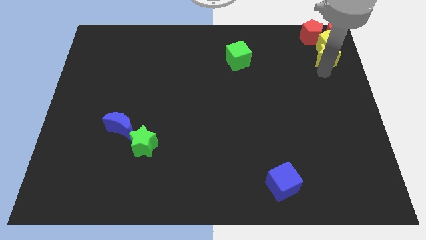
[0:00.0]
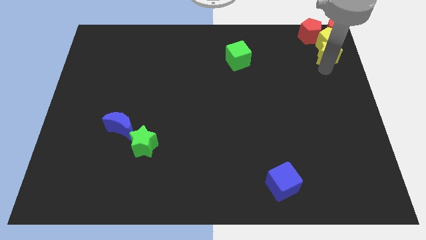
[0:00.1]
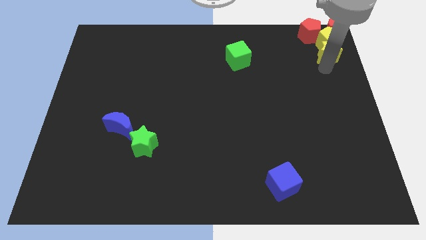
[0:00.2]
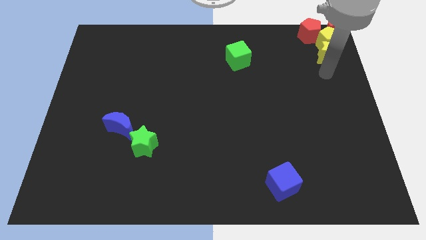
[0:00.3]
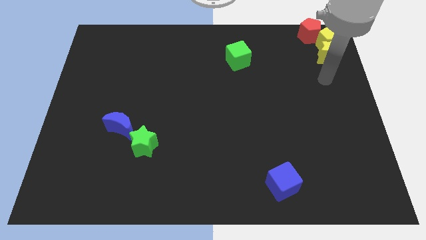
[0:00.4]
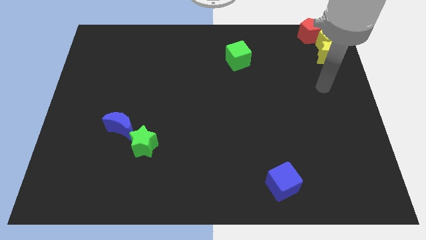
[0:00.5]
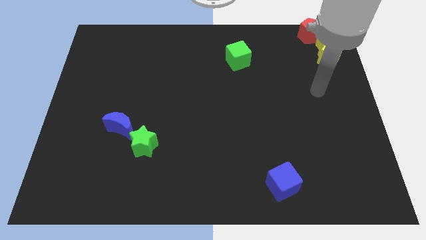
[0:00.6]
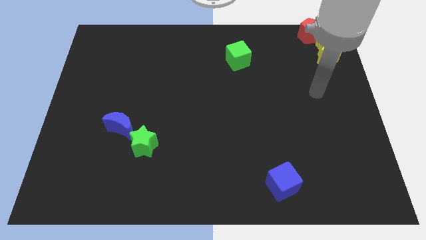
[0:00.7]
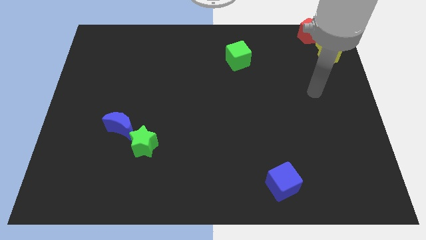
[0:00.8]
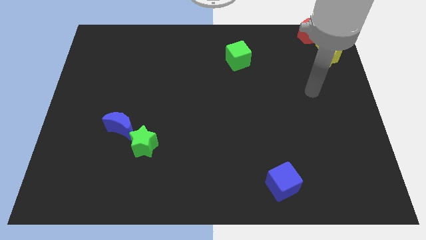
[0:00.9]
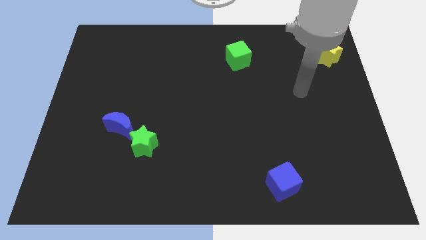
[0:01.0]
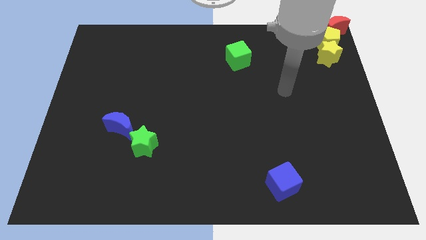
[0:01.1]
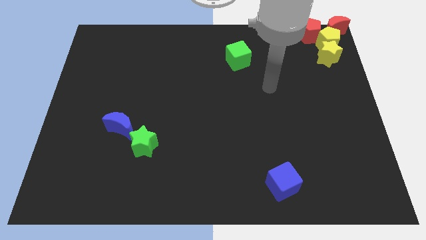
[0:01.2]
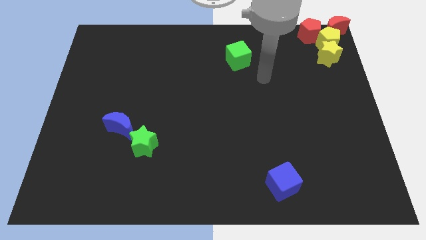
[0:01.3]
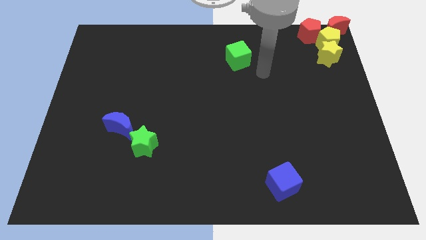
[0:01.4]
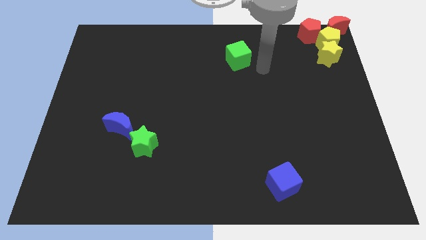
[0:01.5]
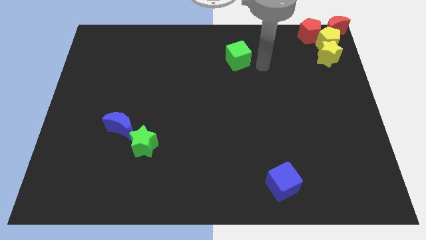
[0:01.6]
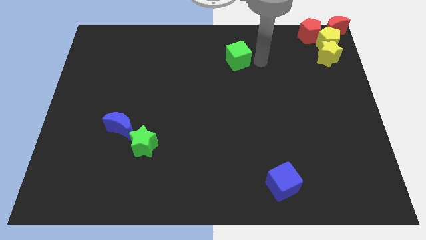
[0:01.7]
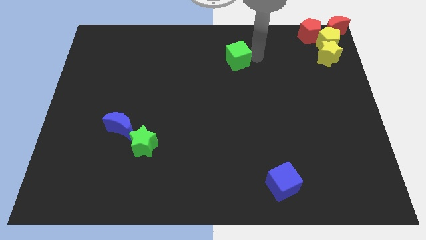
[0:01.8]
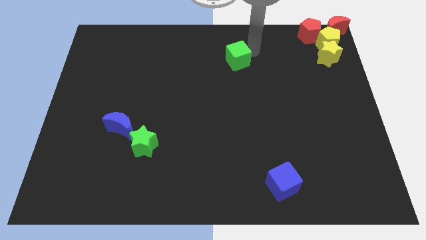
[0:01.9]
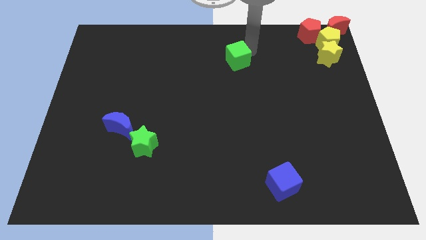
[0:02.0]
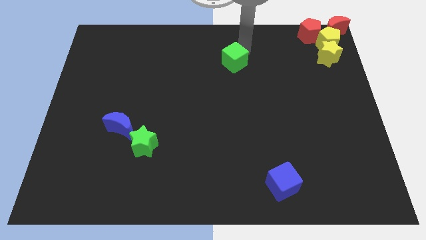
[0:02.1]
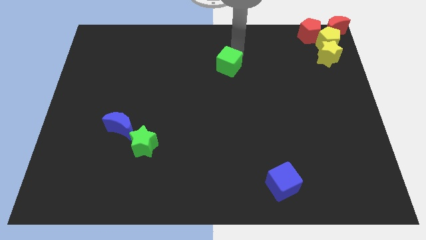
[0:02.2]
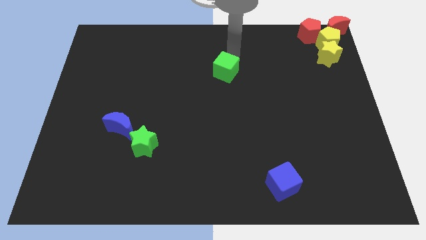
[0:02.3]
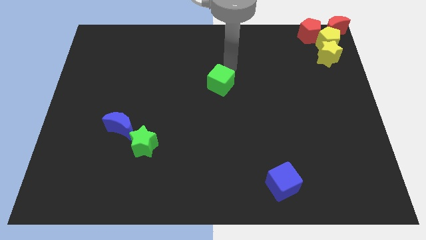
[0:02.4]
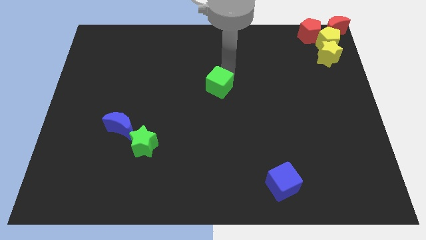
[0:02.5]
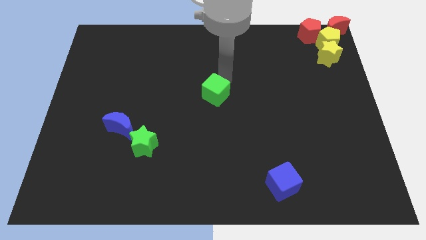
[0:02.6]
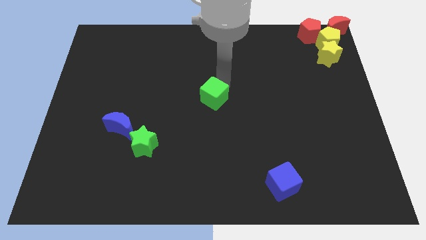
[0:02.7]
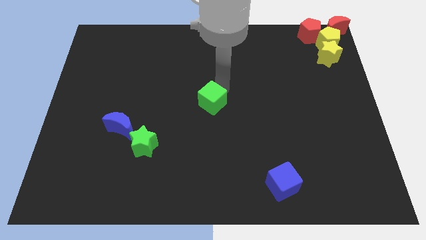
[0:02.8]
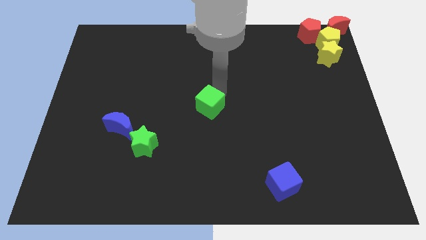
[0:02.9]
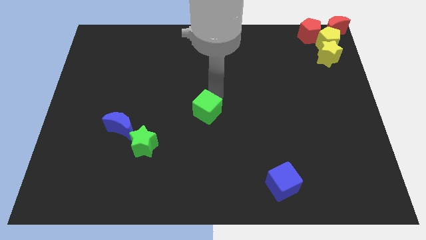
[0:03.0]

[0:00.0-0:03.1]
slide the green cube diagonally to the top right of the green star

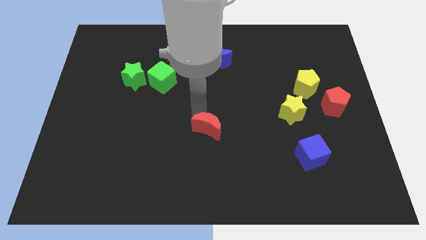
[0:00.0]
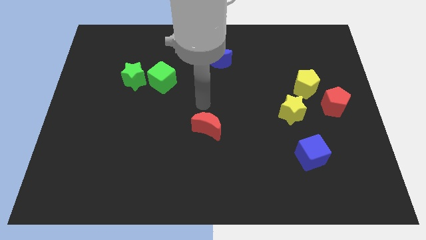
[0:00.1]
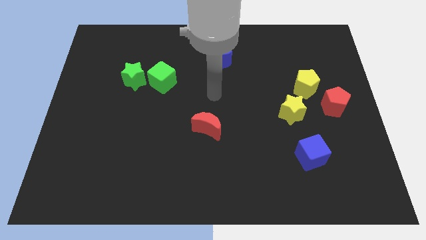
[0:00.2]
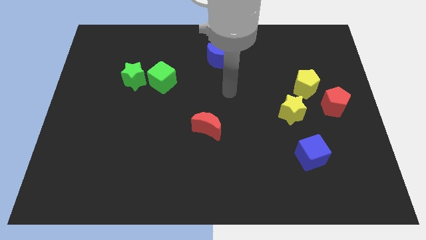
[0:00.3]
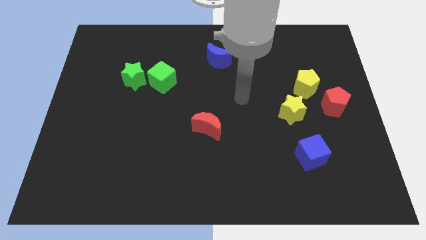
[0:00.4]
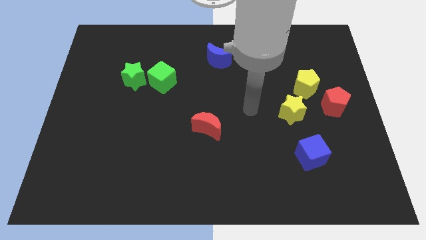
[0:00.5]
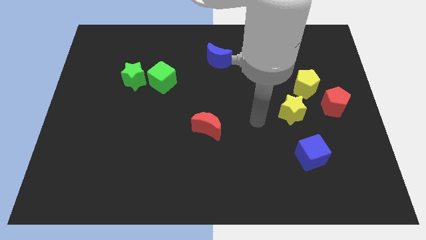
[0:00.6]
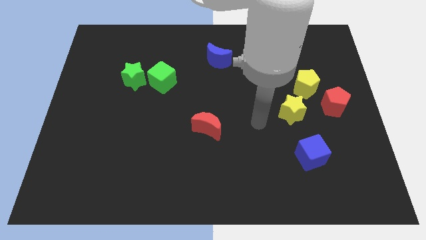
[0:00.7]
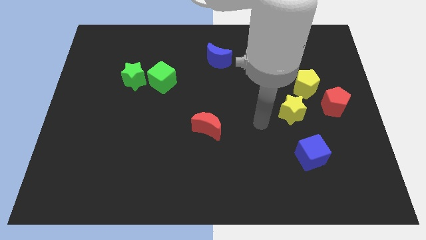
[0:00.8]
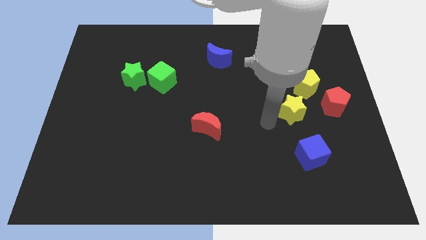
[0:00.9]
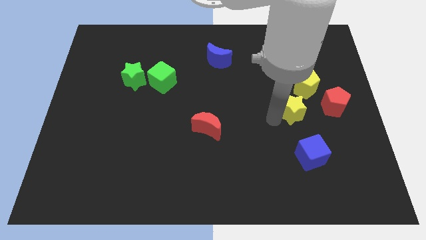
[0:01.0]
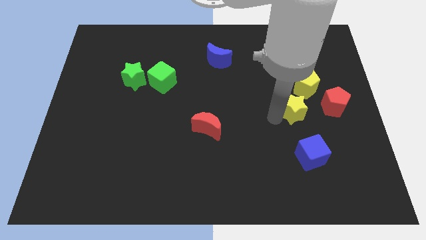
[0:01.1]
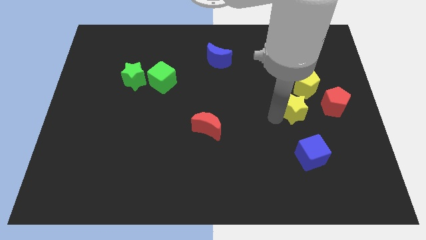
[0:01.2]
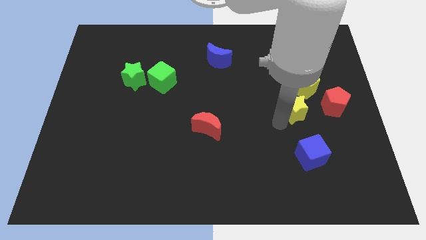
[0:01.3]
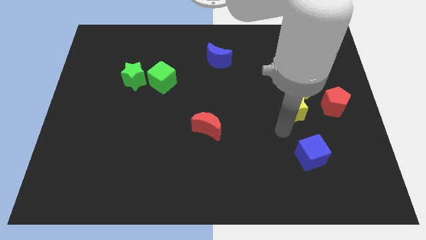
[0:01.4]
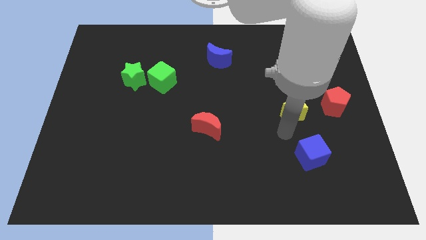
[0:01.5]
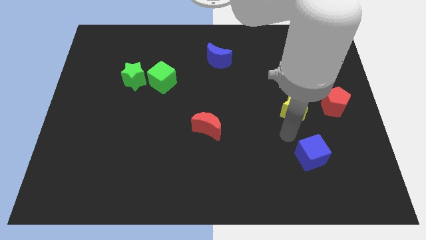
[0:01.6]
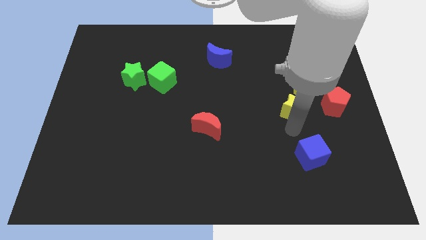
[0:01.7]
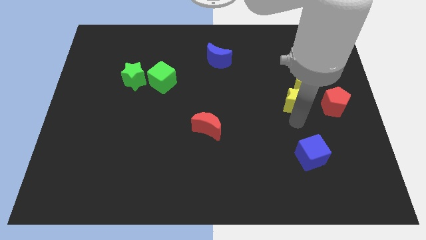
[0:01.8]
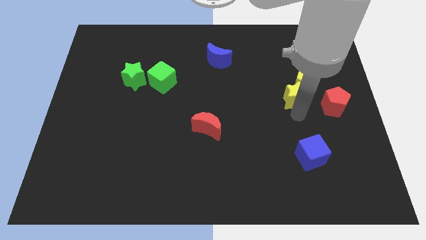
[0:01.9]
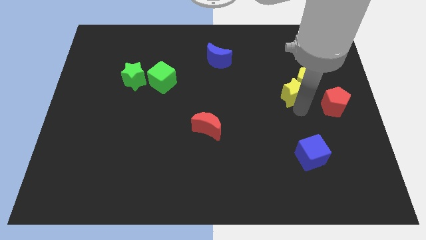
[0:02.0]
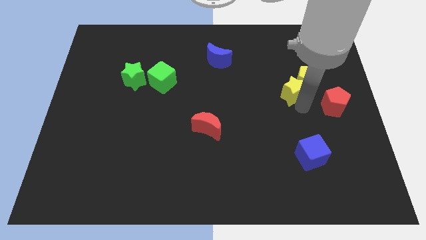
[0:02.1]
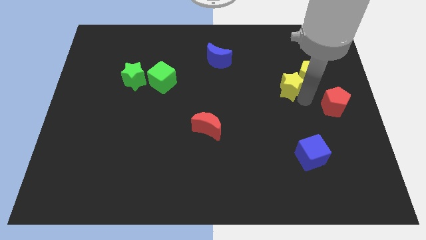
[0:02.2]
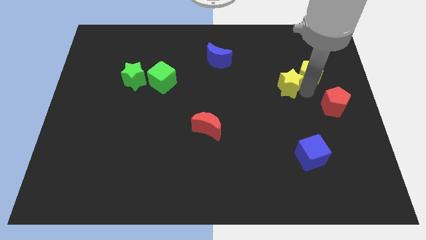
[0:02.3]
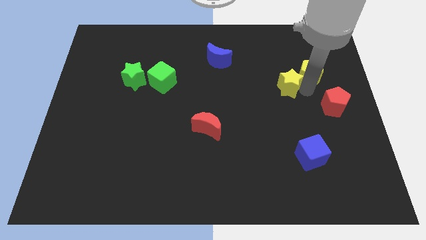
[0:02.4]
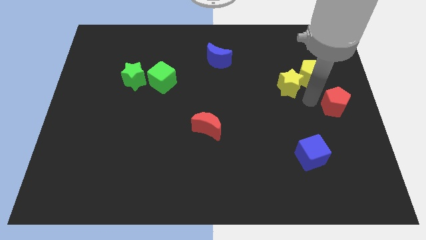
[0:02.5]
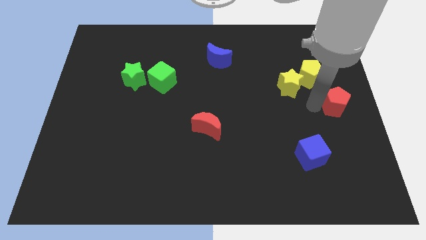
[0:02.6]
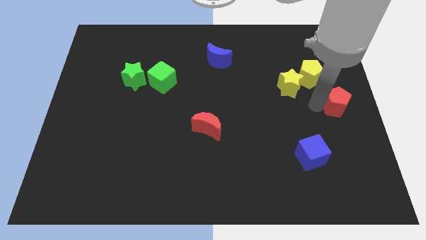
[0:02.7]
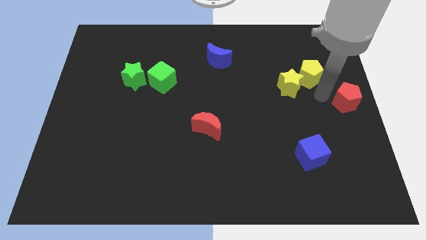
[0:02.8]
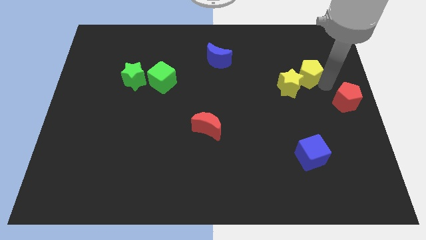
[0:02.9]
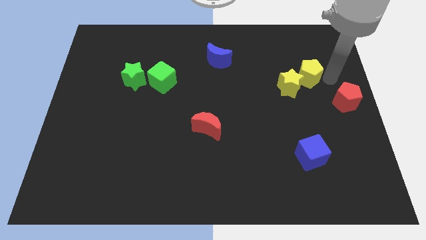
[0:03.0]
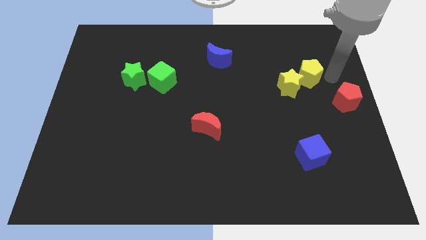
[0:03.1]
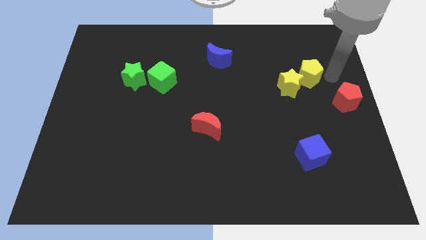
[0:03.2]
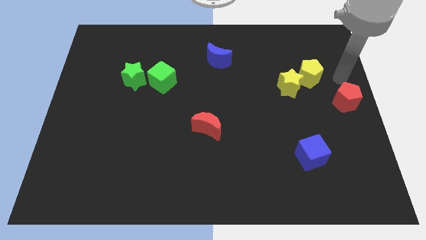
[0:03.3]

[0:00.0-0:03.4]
push the yellow star into the yellow pentagon

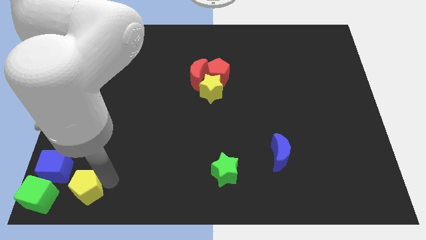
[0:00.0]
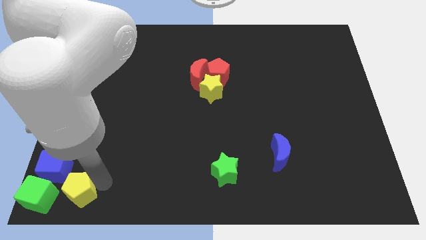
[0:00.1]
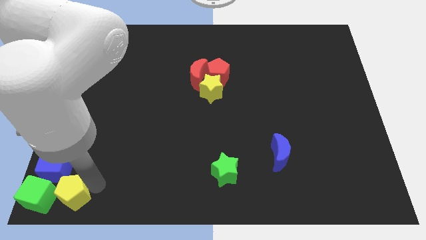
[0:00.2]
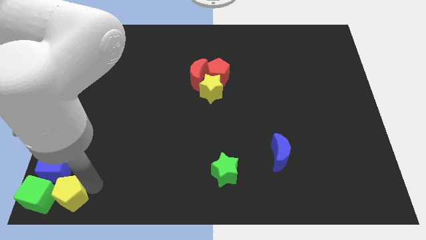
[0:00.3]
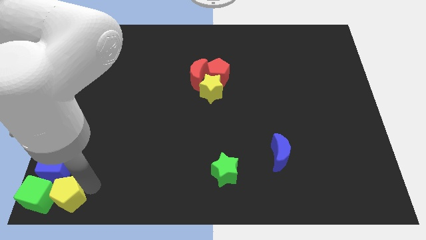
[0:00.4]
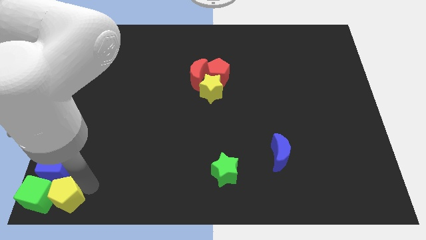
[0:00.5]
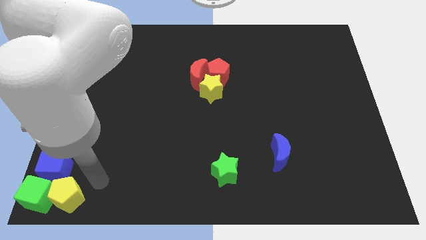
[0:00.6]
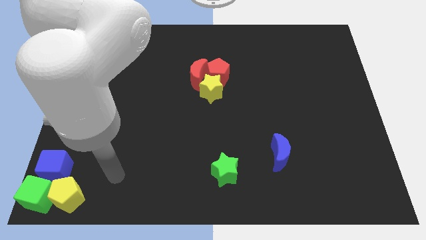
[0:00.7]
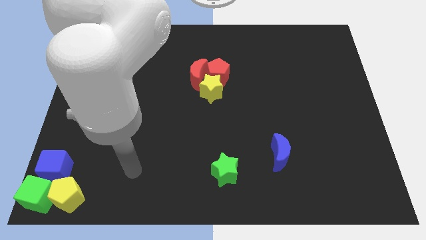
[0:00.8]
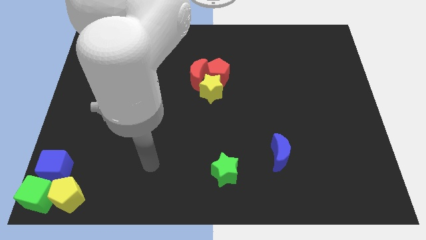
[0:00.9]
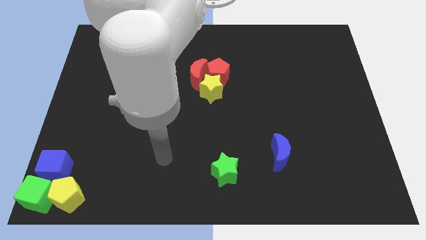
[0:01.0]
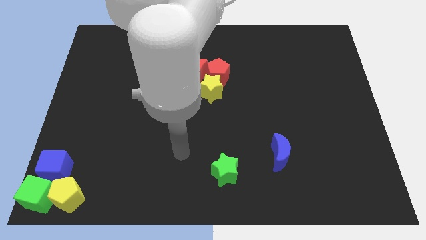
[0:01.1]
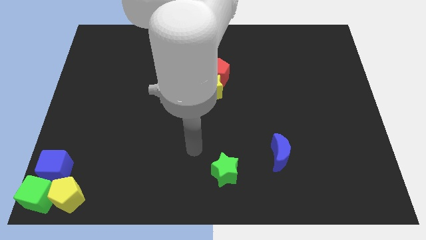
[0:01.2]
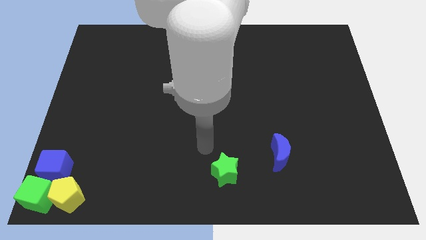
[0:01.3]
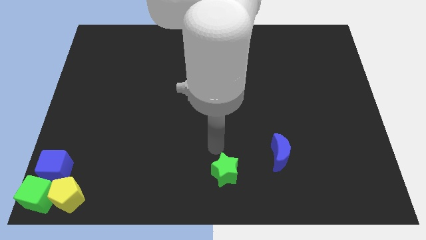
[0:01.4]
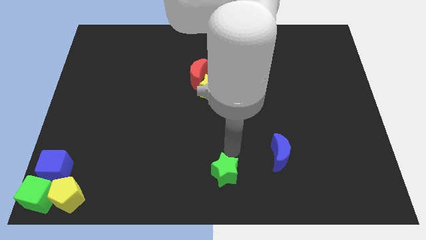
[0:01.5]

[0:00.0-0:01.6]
place your arm at the top of green star

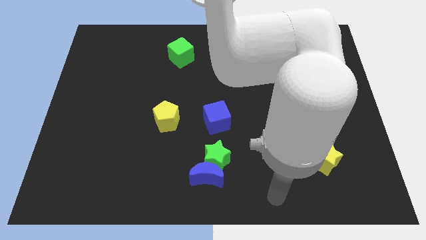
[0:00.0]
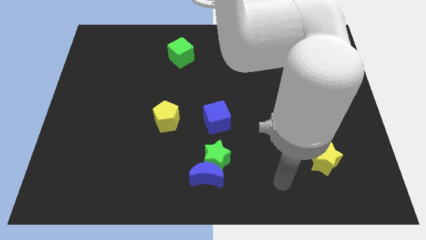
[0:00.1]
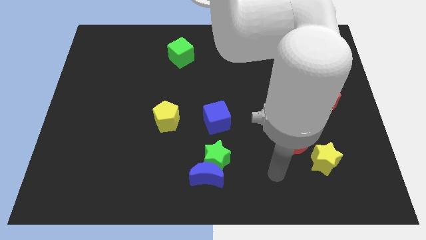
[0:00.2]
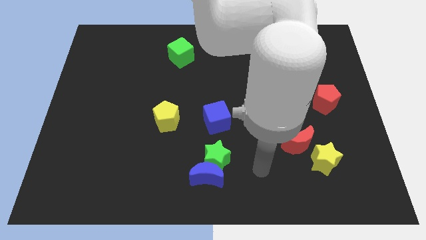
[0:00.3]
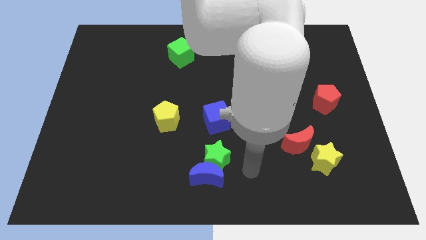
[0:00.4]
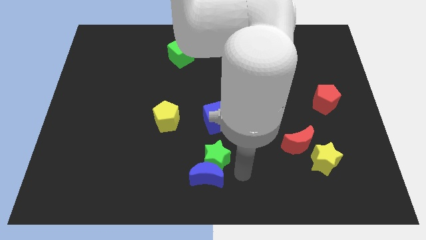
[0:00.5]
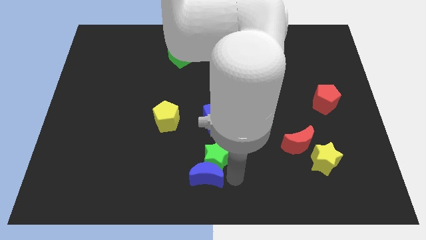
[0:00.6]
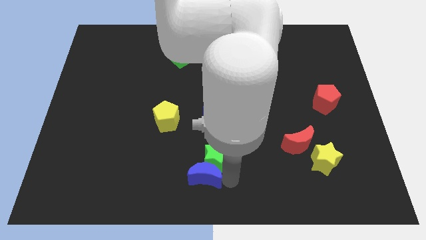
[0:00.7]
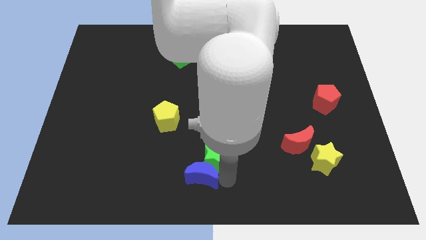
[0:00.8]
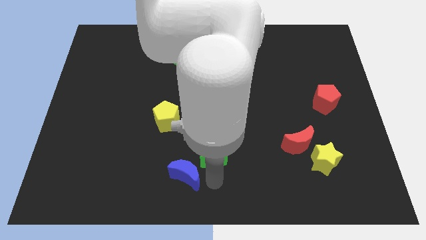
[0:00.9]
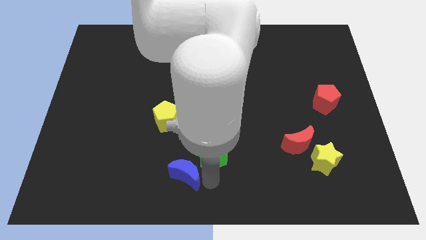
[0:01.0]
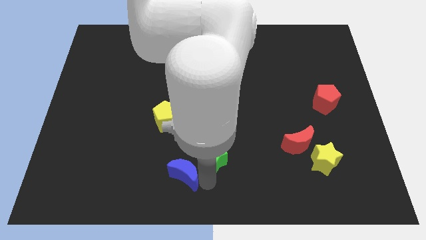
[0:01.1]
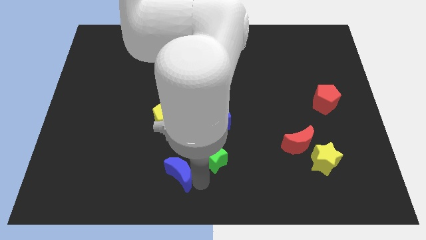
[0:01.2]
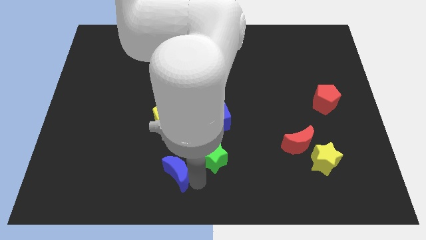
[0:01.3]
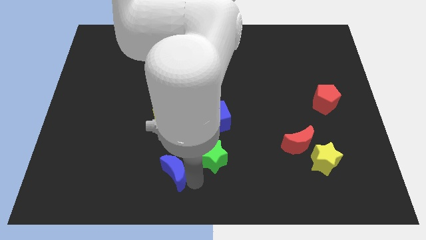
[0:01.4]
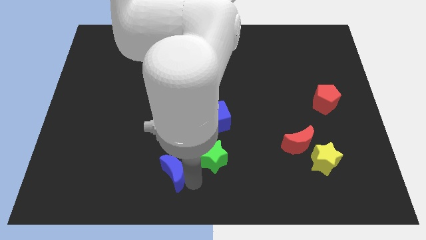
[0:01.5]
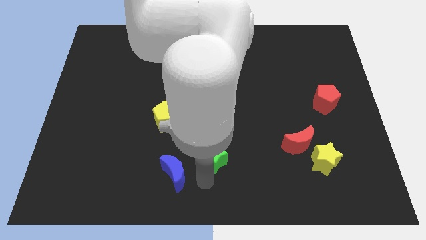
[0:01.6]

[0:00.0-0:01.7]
push the blue moon to the left
